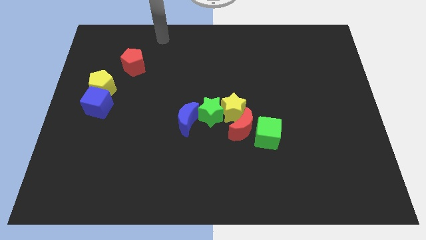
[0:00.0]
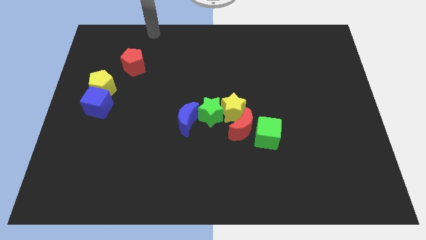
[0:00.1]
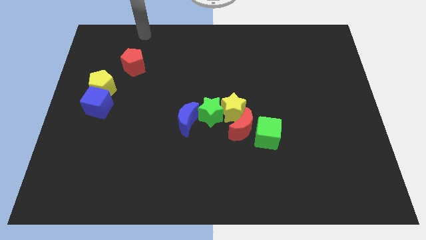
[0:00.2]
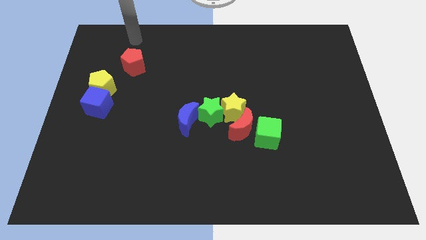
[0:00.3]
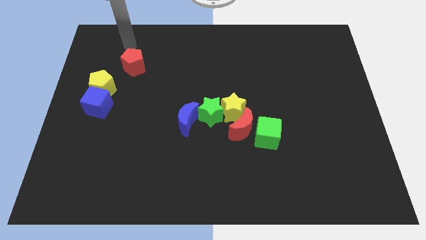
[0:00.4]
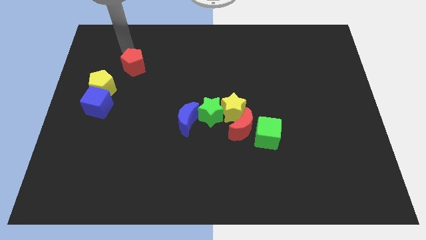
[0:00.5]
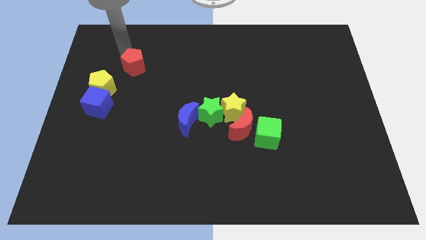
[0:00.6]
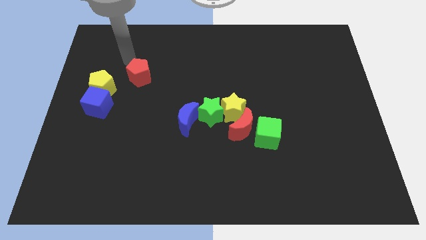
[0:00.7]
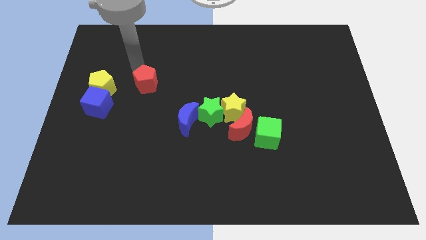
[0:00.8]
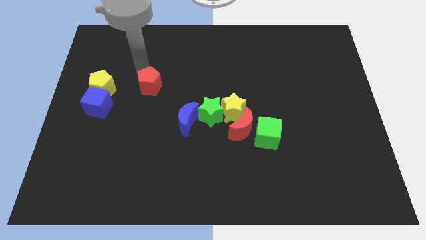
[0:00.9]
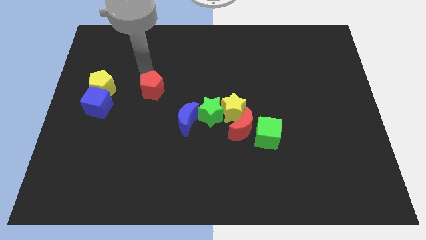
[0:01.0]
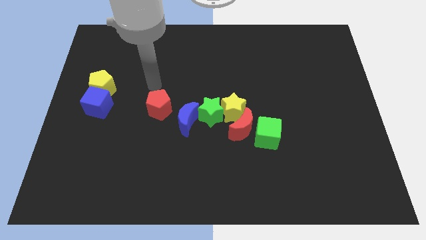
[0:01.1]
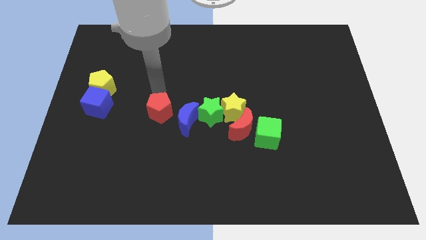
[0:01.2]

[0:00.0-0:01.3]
place the red pentagon to the left of the blue crescent

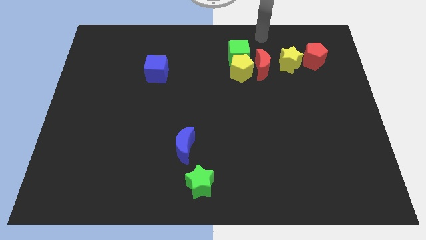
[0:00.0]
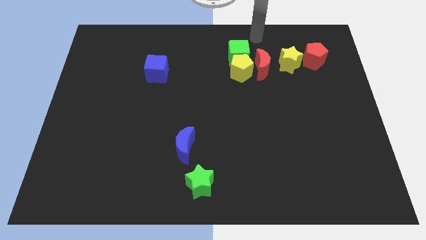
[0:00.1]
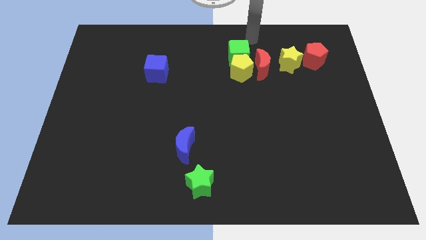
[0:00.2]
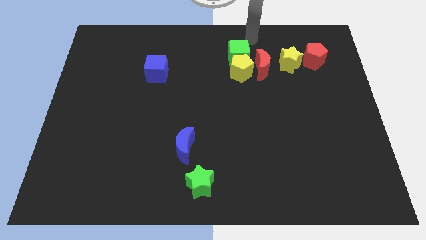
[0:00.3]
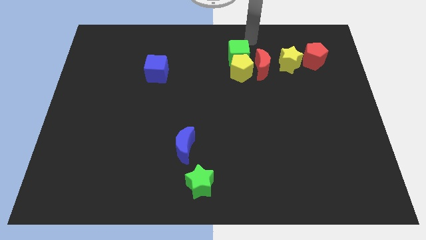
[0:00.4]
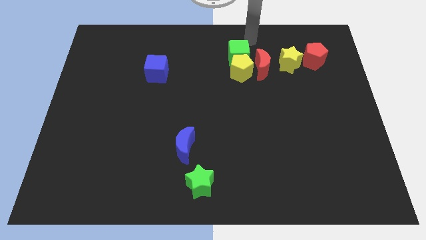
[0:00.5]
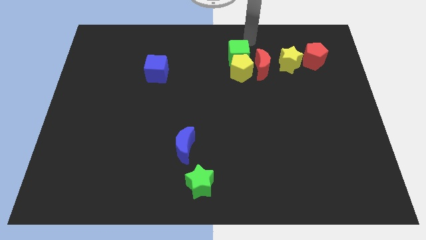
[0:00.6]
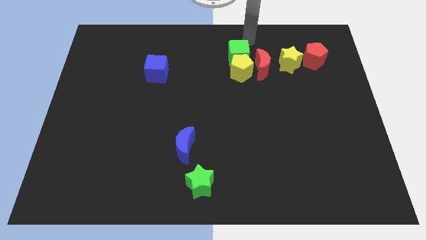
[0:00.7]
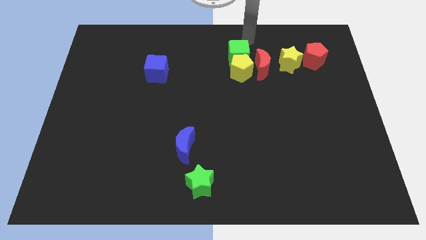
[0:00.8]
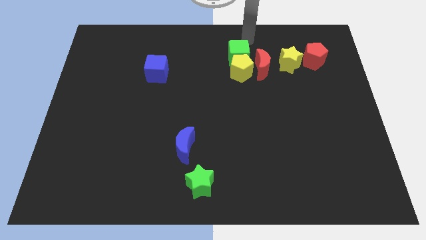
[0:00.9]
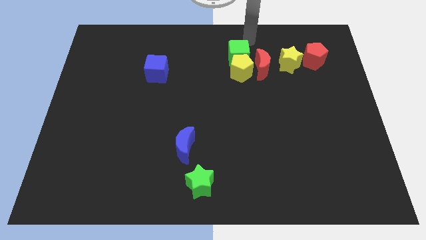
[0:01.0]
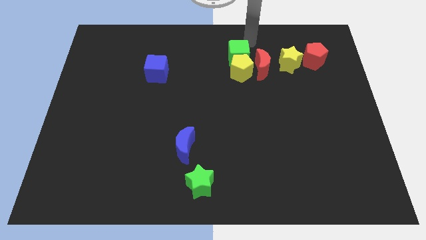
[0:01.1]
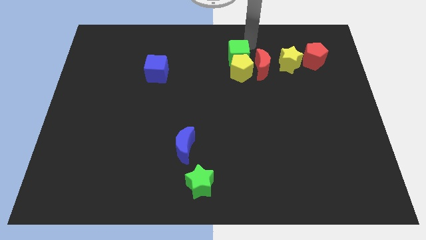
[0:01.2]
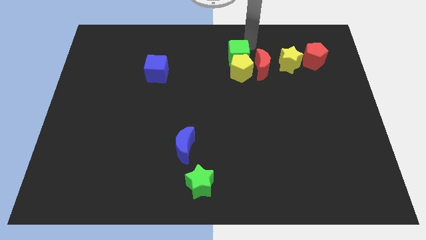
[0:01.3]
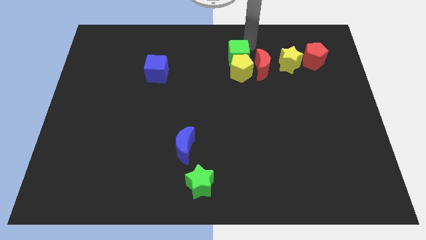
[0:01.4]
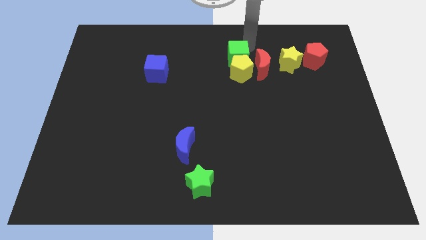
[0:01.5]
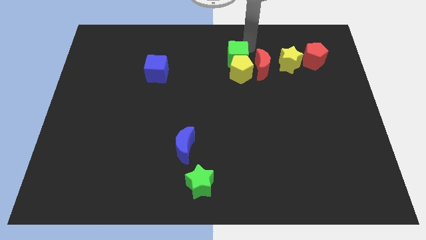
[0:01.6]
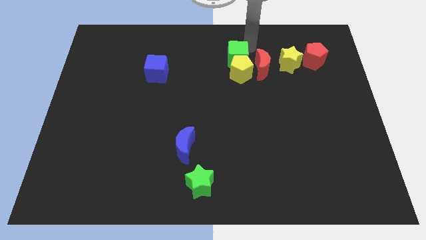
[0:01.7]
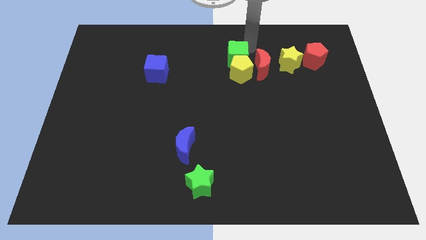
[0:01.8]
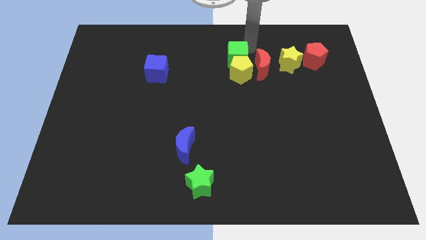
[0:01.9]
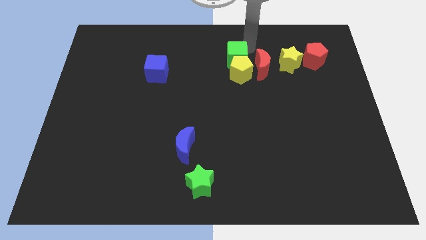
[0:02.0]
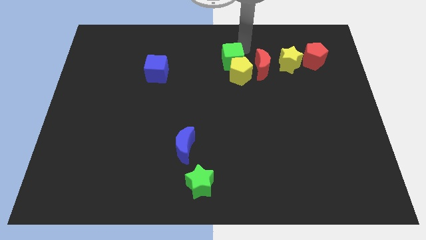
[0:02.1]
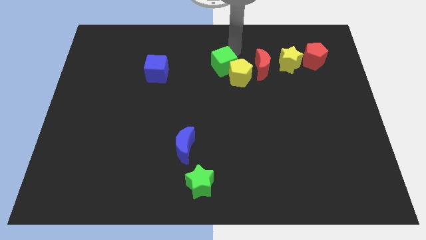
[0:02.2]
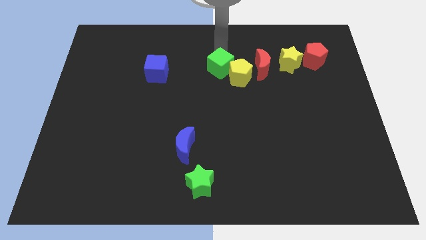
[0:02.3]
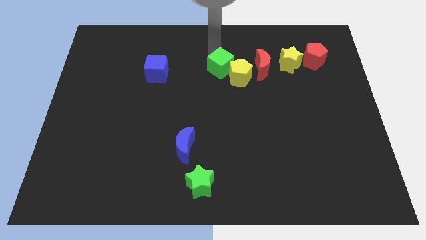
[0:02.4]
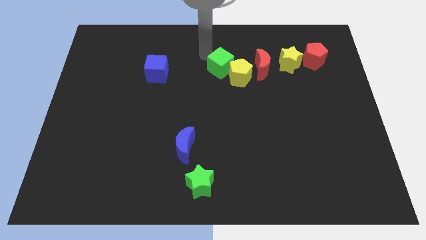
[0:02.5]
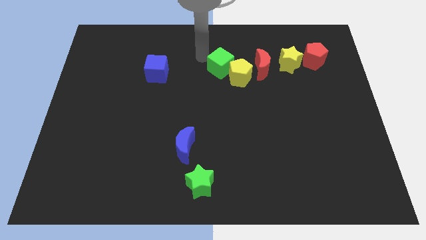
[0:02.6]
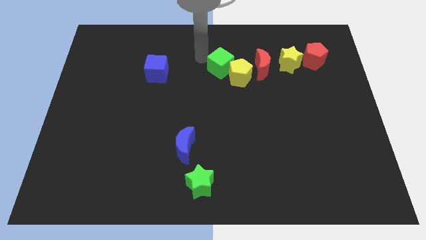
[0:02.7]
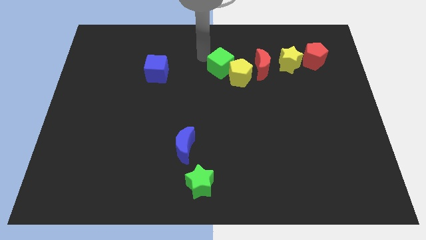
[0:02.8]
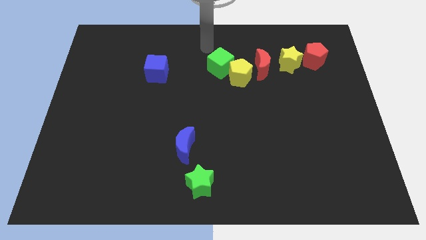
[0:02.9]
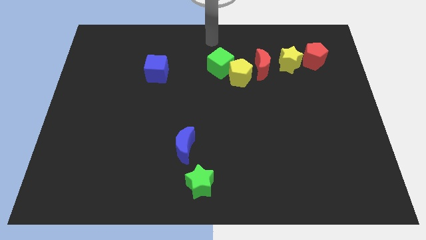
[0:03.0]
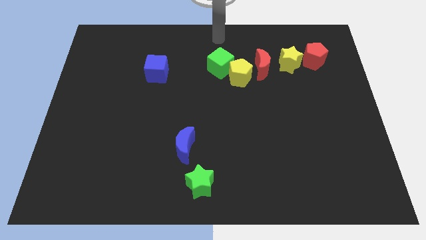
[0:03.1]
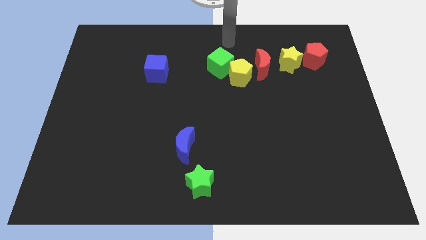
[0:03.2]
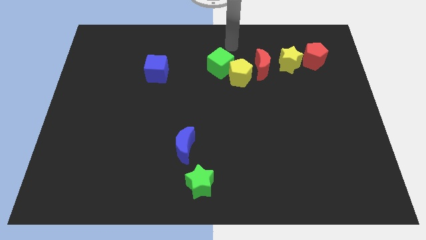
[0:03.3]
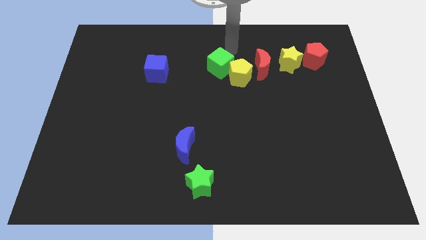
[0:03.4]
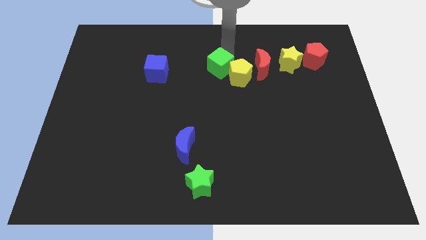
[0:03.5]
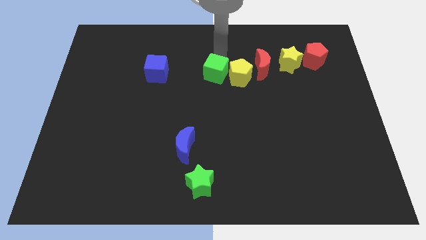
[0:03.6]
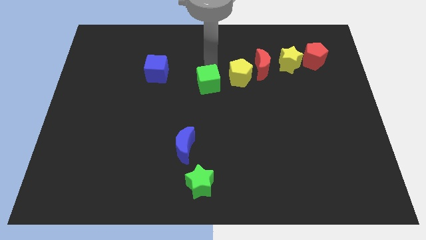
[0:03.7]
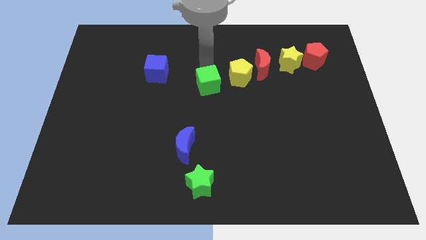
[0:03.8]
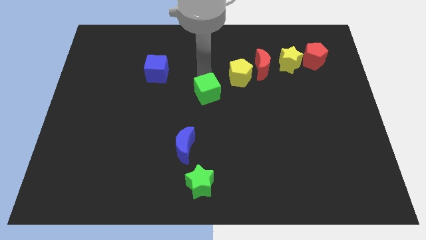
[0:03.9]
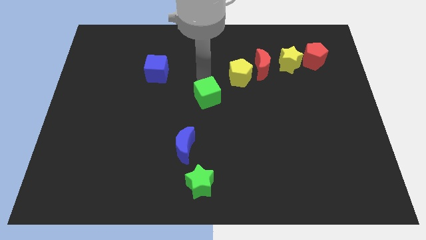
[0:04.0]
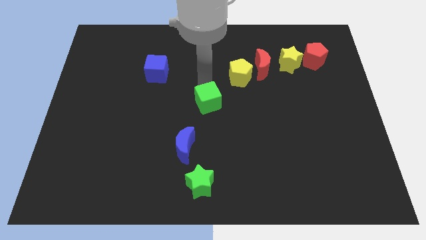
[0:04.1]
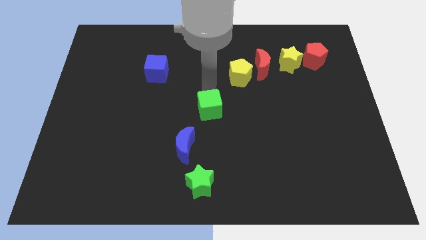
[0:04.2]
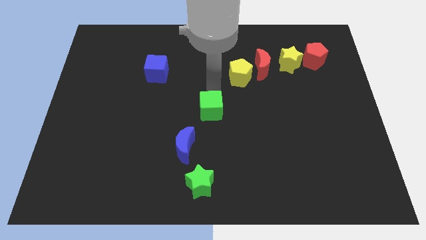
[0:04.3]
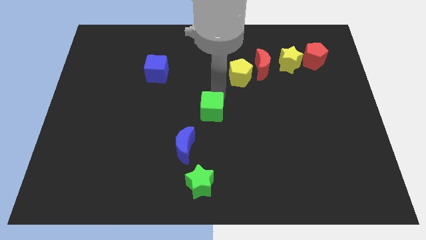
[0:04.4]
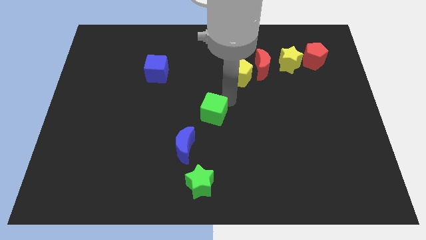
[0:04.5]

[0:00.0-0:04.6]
separate the green cube and yellow pentagon

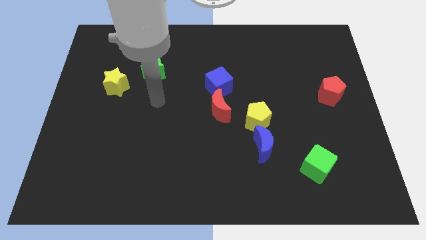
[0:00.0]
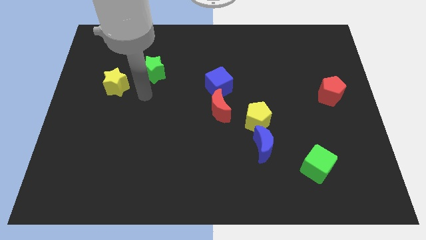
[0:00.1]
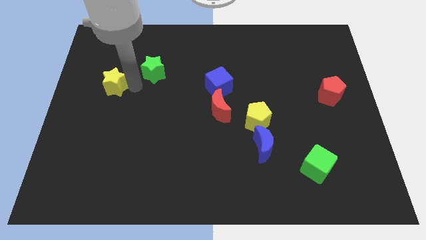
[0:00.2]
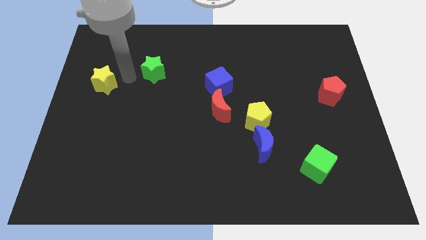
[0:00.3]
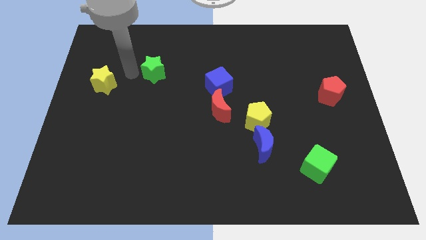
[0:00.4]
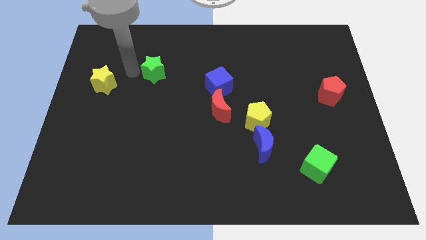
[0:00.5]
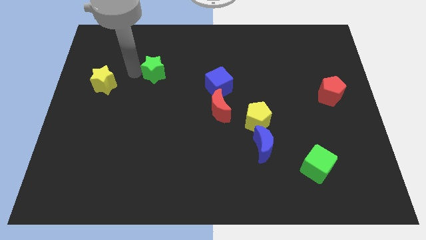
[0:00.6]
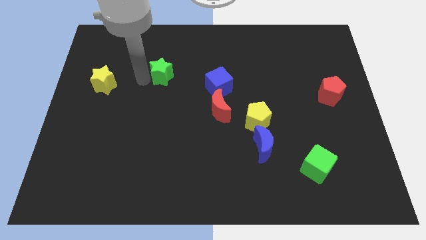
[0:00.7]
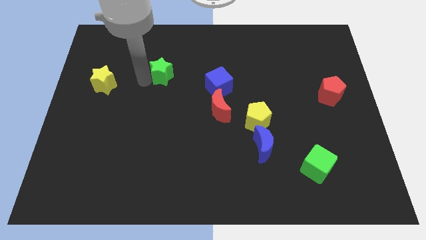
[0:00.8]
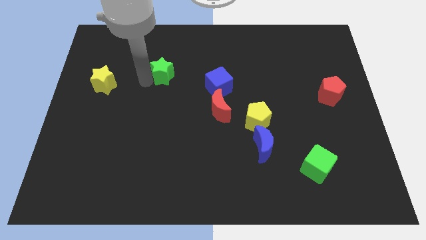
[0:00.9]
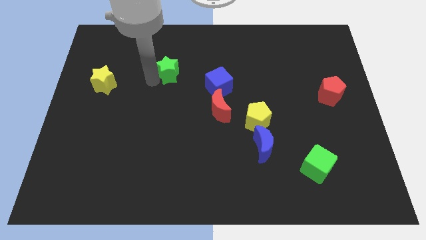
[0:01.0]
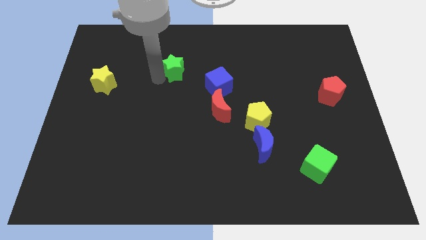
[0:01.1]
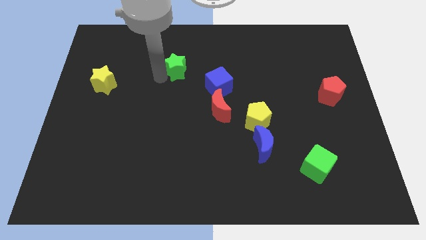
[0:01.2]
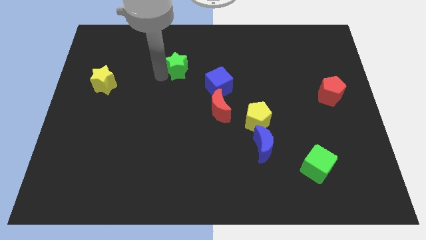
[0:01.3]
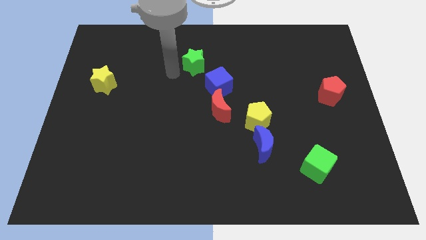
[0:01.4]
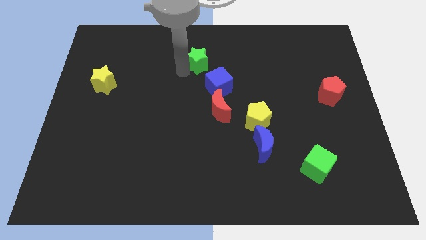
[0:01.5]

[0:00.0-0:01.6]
place the green star above the blue cube

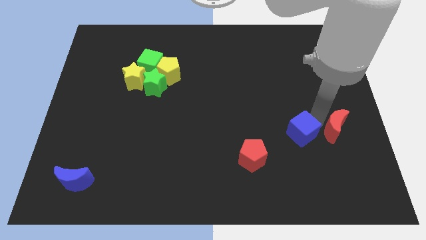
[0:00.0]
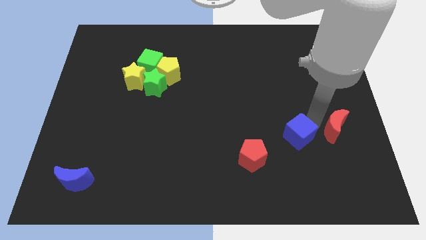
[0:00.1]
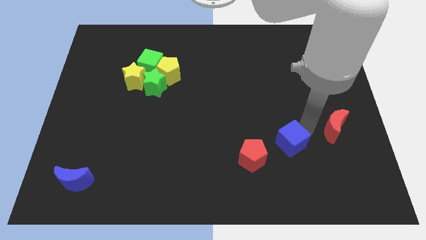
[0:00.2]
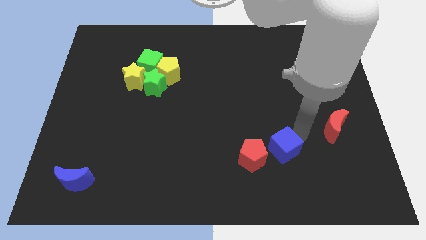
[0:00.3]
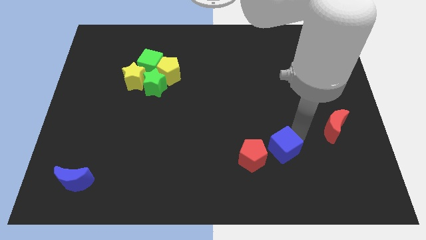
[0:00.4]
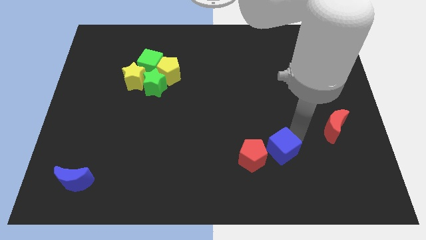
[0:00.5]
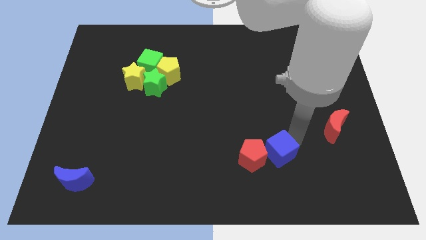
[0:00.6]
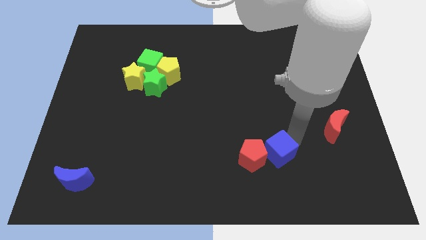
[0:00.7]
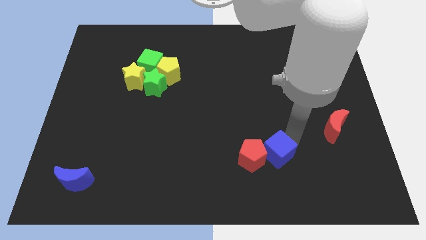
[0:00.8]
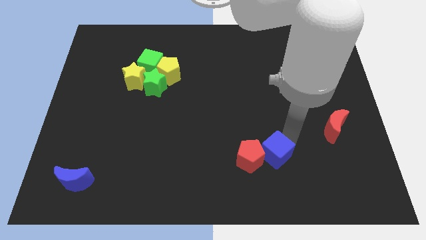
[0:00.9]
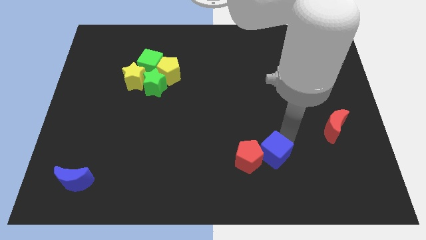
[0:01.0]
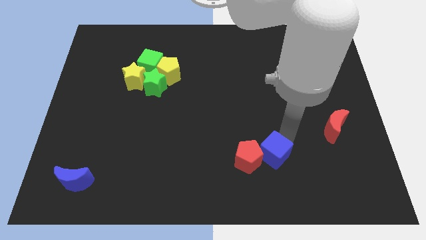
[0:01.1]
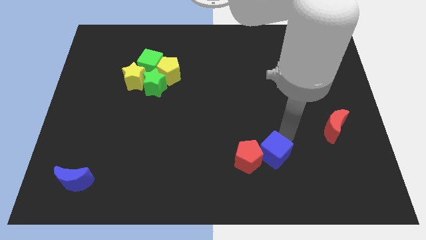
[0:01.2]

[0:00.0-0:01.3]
push the blue cube into the red pentagon

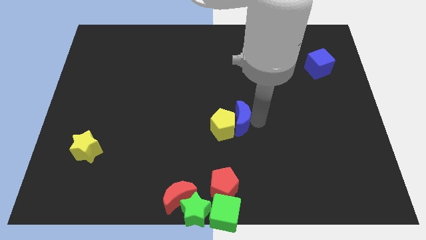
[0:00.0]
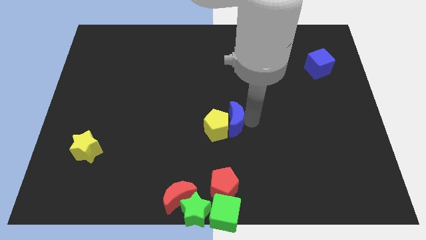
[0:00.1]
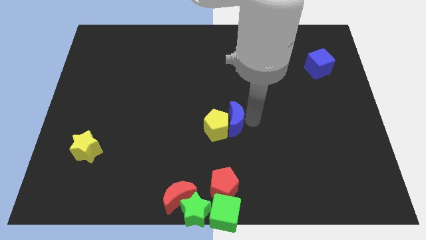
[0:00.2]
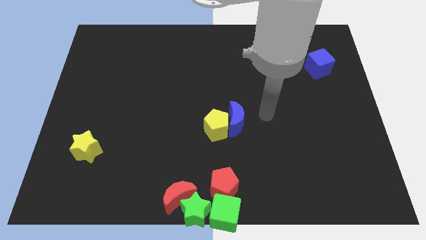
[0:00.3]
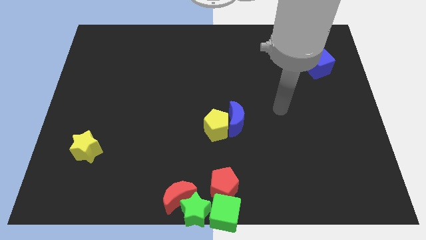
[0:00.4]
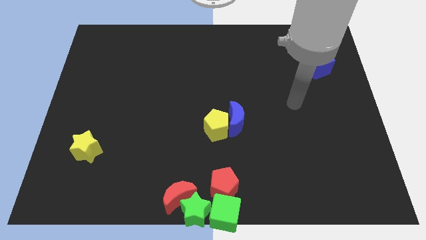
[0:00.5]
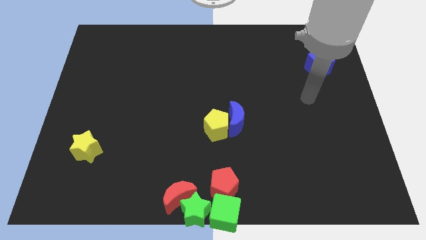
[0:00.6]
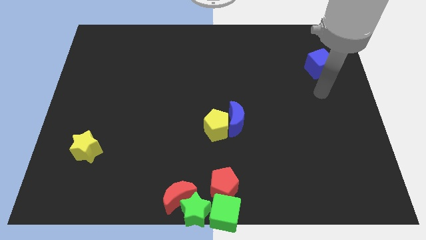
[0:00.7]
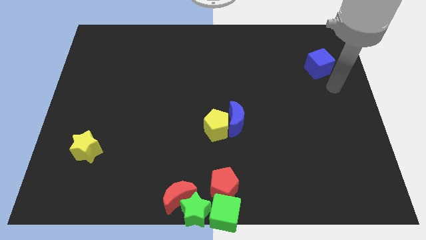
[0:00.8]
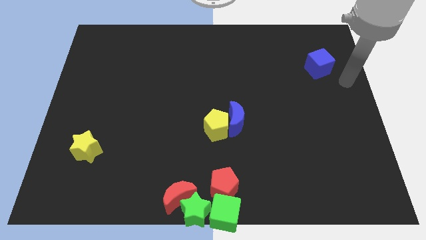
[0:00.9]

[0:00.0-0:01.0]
move the arm away from the blue moon
